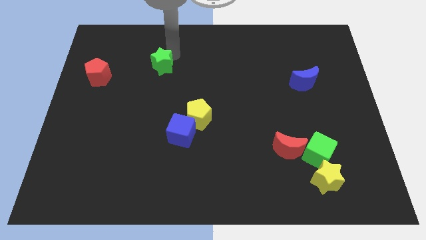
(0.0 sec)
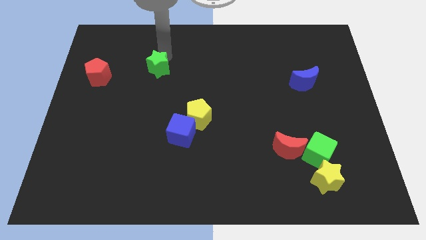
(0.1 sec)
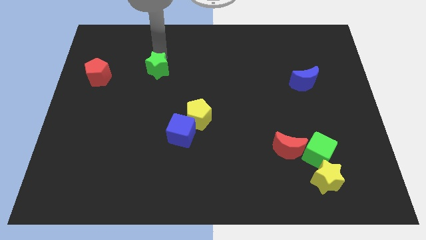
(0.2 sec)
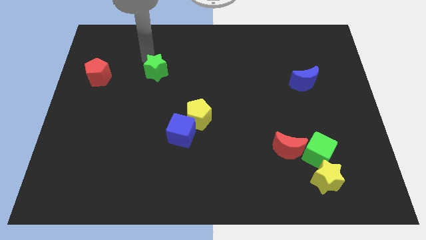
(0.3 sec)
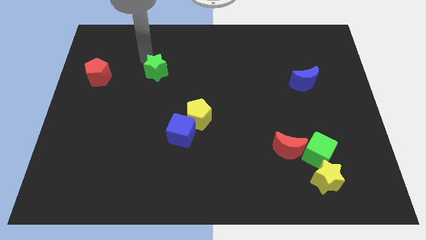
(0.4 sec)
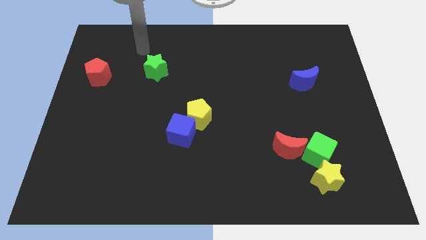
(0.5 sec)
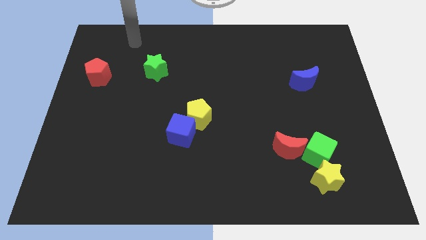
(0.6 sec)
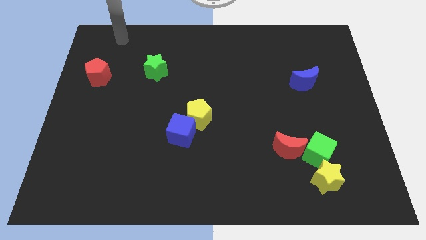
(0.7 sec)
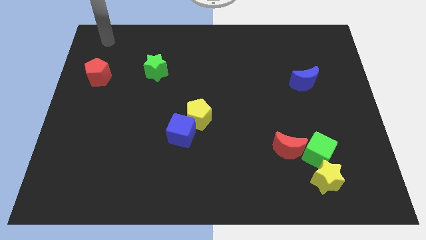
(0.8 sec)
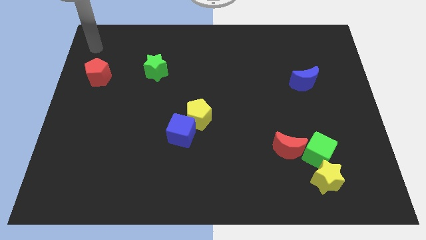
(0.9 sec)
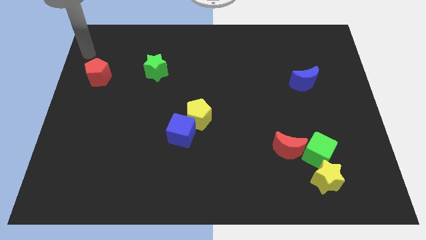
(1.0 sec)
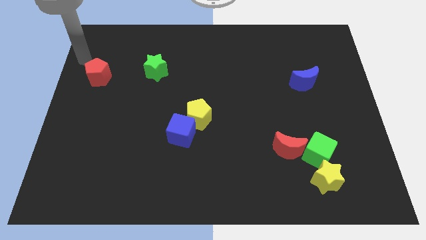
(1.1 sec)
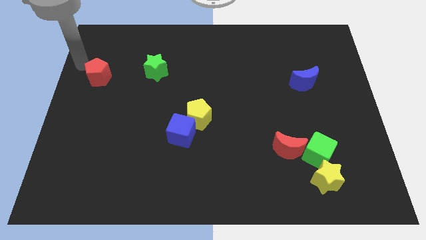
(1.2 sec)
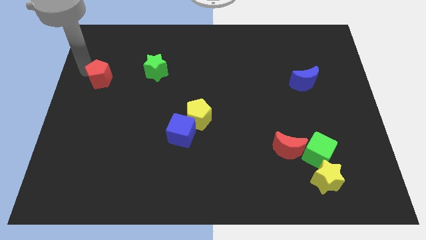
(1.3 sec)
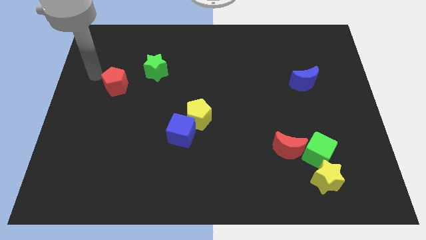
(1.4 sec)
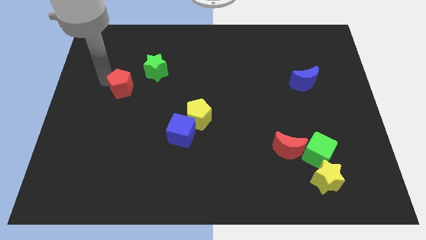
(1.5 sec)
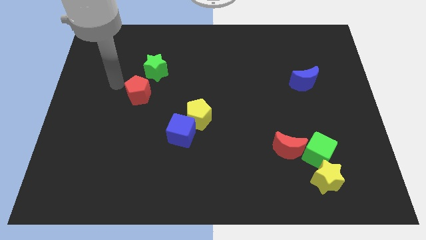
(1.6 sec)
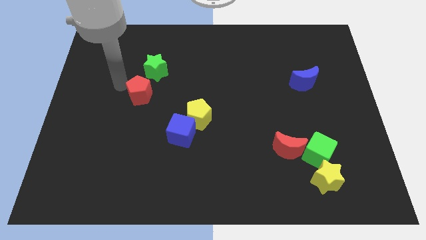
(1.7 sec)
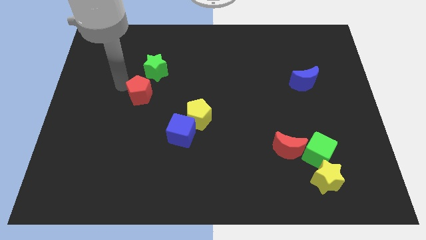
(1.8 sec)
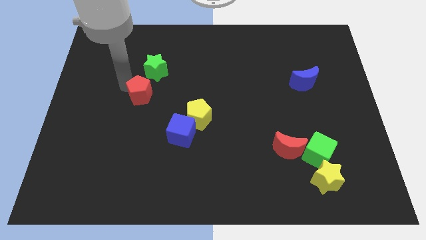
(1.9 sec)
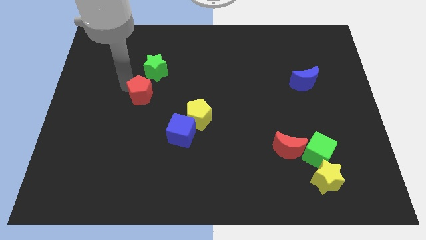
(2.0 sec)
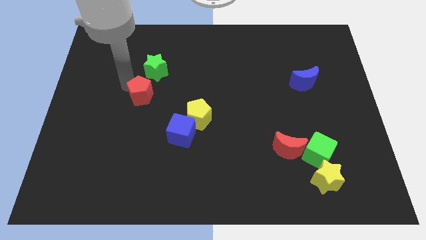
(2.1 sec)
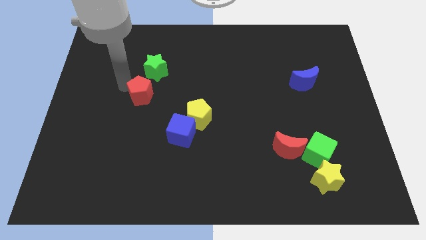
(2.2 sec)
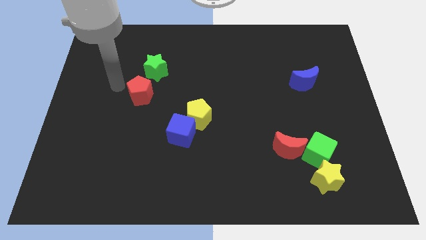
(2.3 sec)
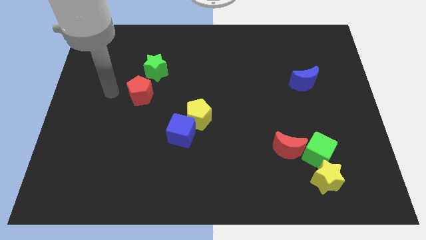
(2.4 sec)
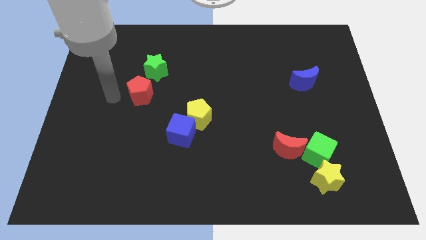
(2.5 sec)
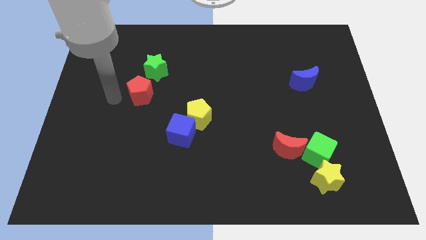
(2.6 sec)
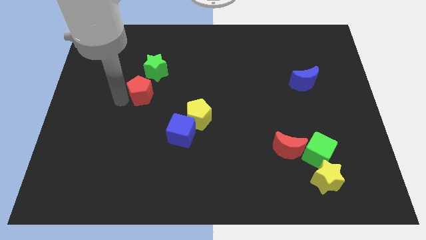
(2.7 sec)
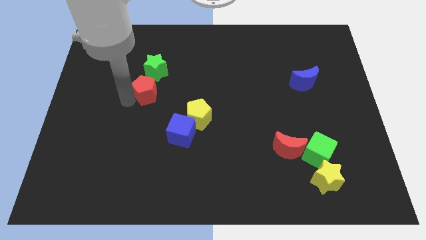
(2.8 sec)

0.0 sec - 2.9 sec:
move red pentagon near to green star

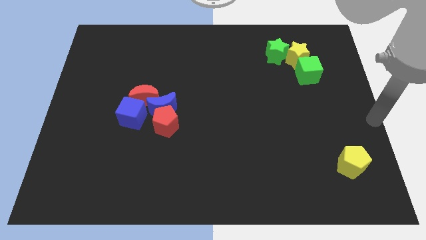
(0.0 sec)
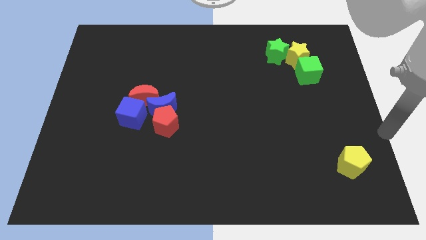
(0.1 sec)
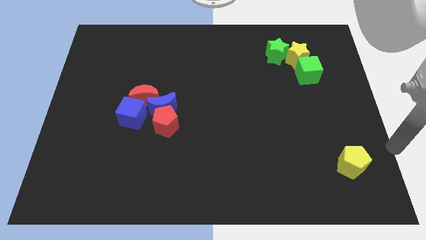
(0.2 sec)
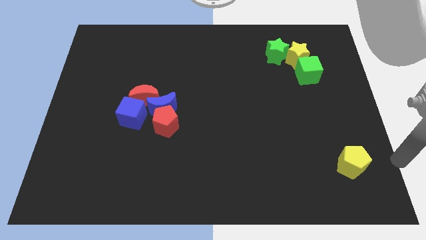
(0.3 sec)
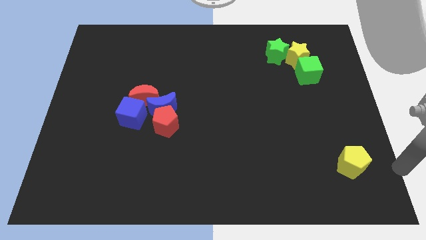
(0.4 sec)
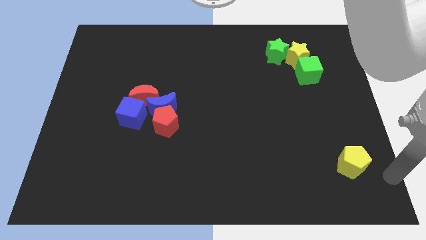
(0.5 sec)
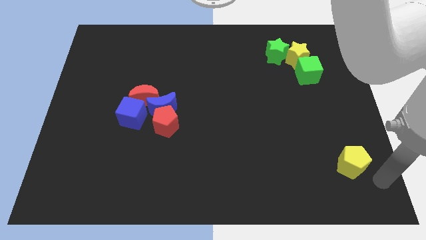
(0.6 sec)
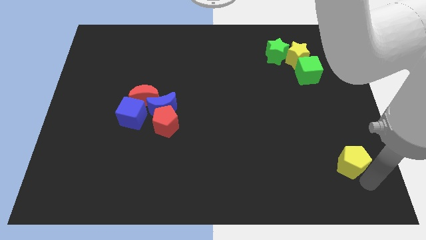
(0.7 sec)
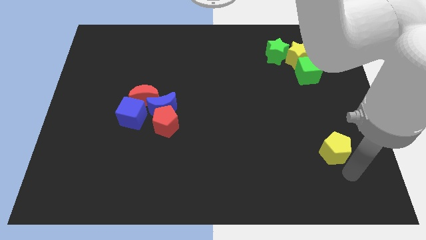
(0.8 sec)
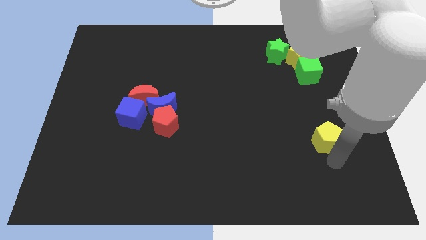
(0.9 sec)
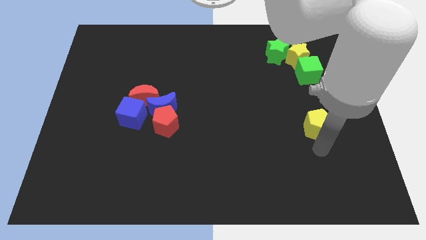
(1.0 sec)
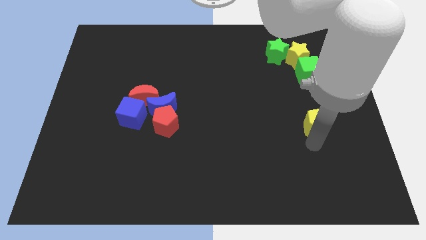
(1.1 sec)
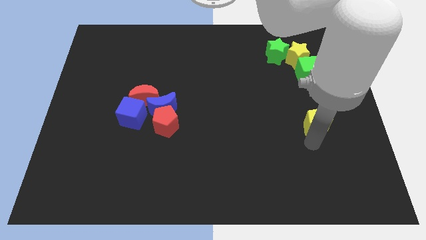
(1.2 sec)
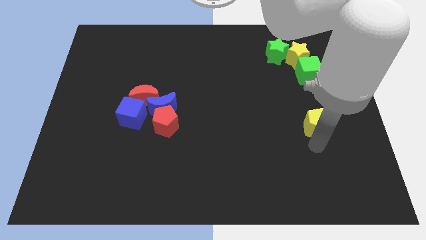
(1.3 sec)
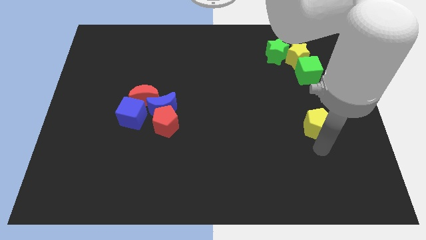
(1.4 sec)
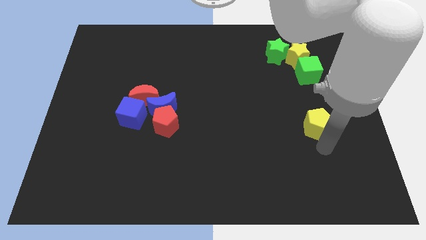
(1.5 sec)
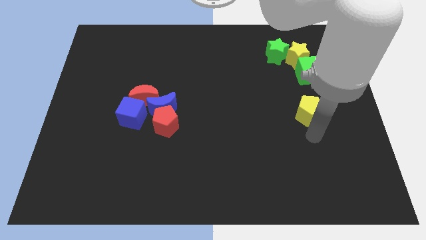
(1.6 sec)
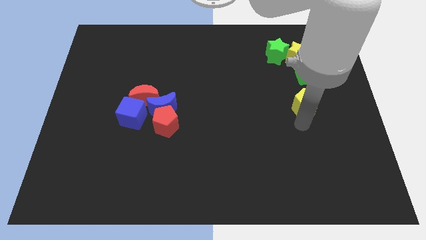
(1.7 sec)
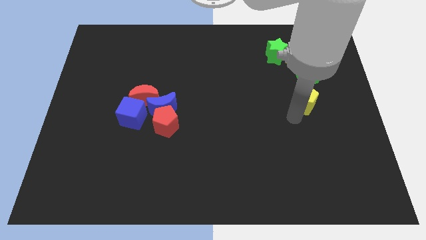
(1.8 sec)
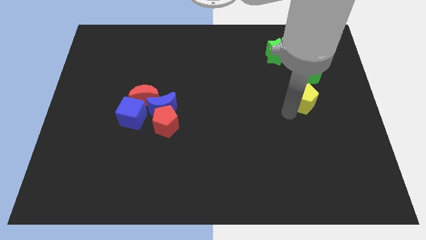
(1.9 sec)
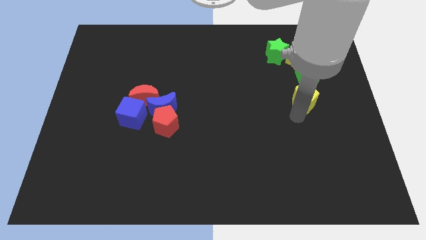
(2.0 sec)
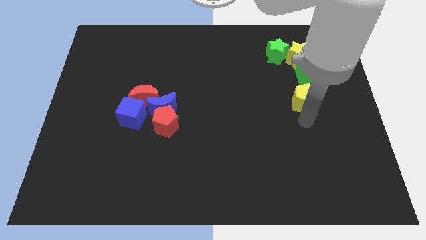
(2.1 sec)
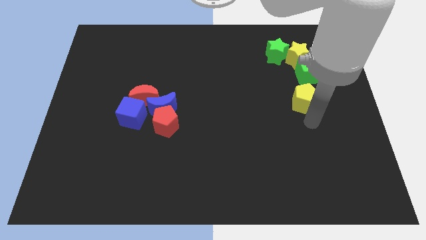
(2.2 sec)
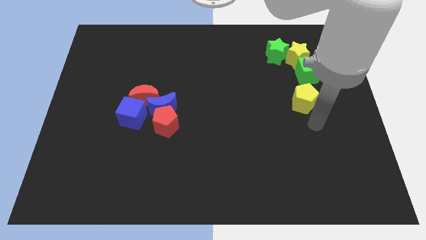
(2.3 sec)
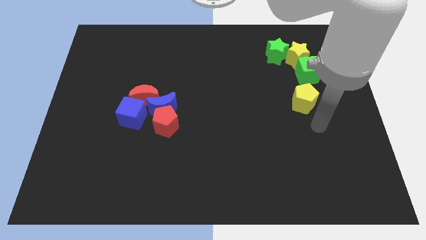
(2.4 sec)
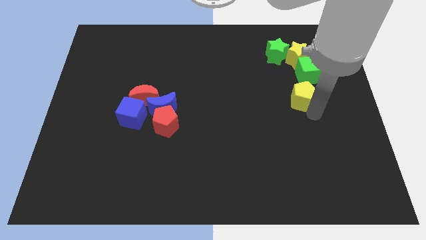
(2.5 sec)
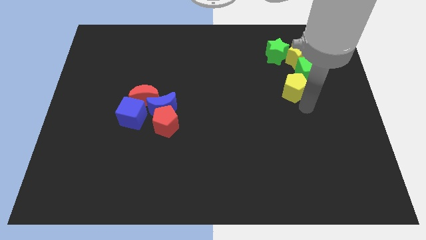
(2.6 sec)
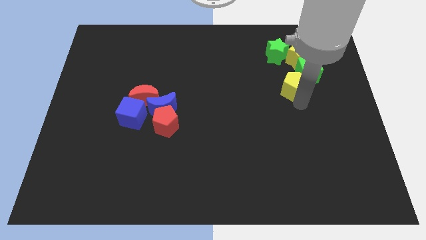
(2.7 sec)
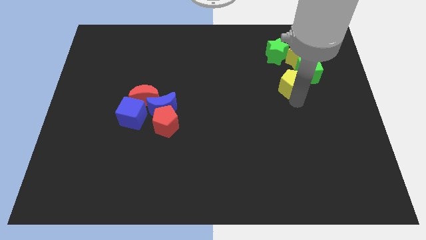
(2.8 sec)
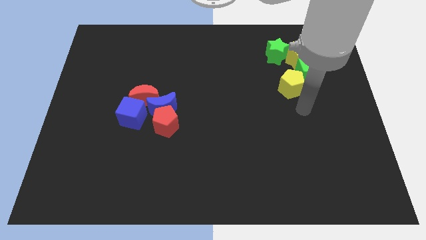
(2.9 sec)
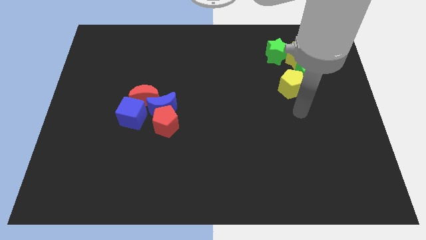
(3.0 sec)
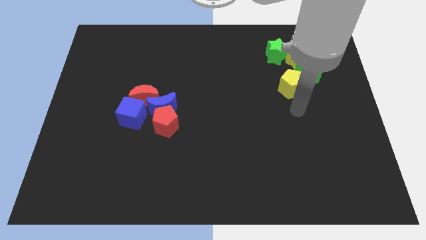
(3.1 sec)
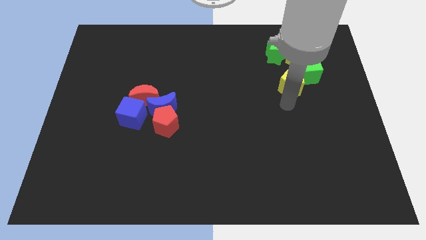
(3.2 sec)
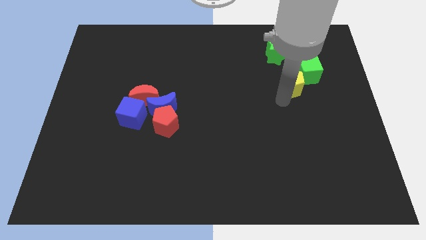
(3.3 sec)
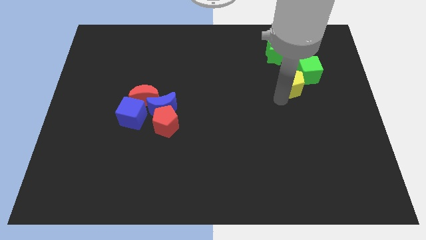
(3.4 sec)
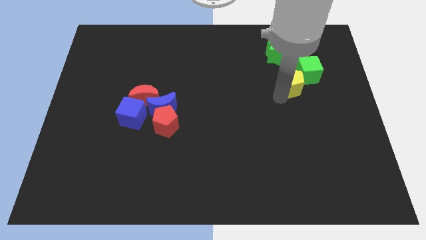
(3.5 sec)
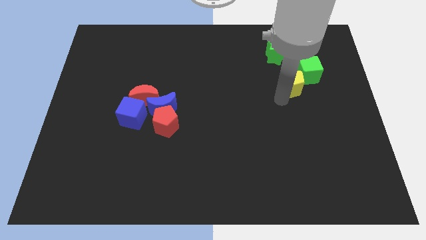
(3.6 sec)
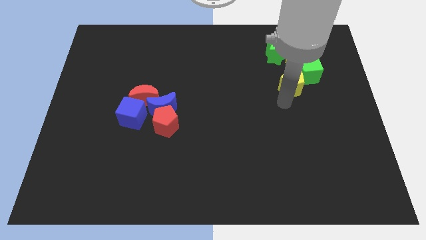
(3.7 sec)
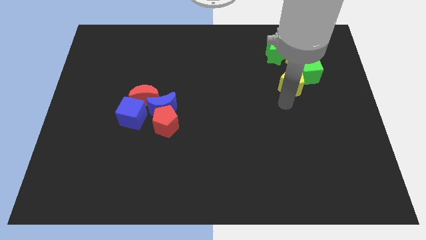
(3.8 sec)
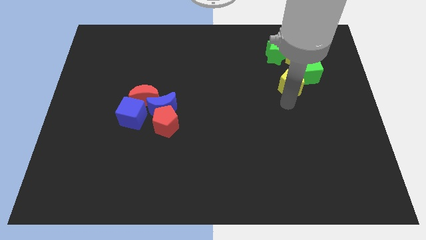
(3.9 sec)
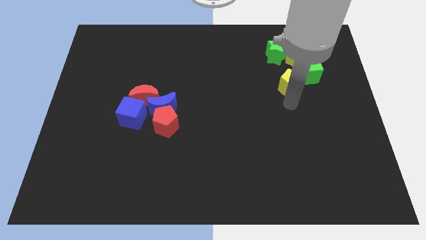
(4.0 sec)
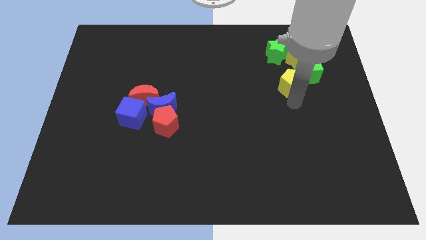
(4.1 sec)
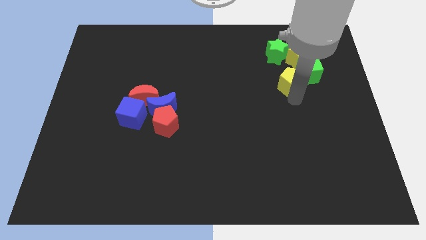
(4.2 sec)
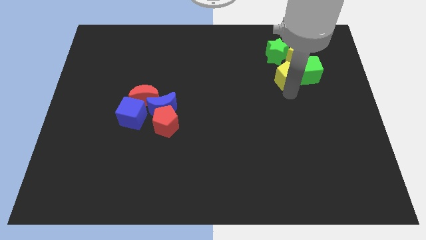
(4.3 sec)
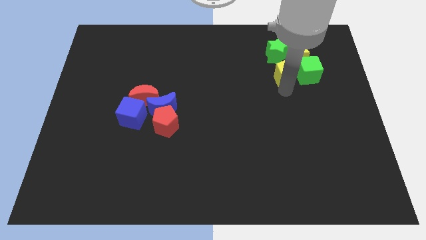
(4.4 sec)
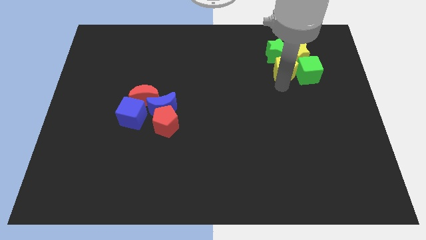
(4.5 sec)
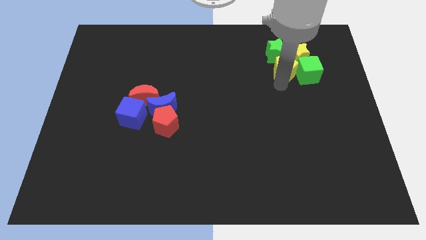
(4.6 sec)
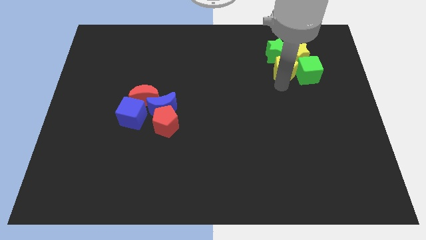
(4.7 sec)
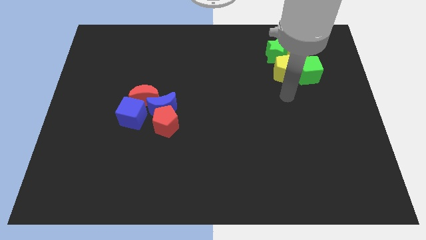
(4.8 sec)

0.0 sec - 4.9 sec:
push the yellow pentagon in between the two green blocks

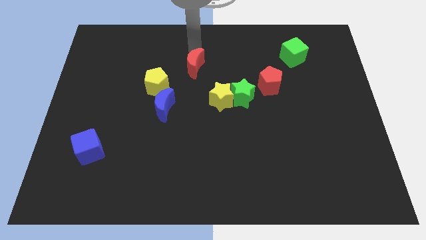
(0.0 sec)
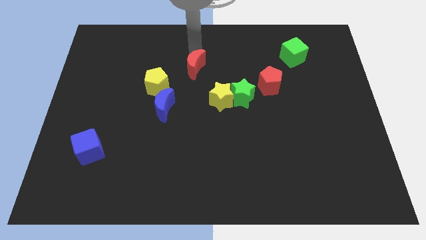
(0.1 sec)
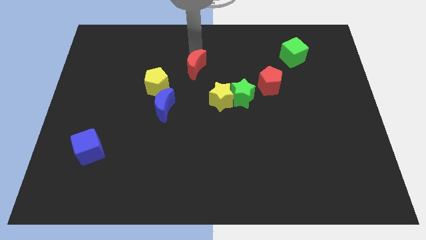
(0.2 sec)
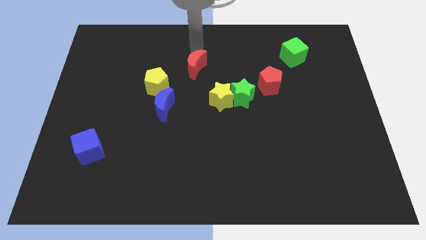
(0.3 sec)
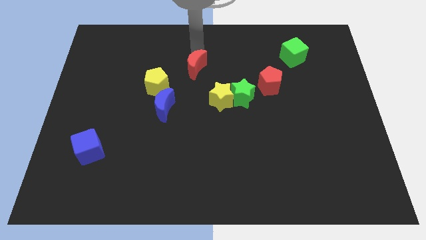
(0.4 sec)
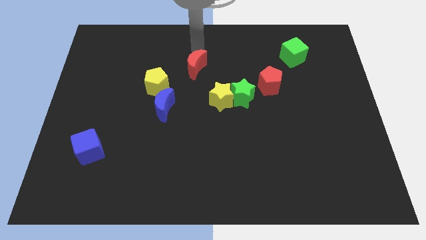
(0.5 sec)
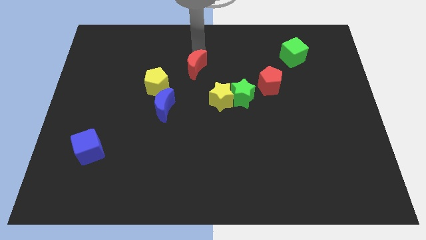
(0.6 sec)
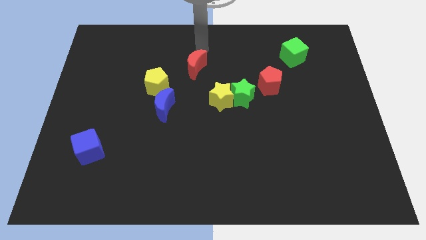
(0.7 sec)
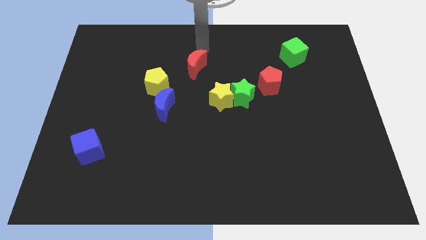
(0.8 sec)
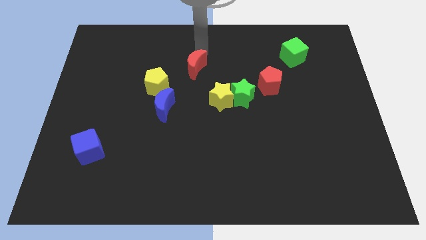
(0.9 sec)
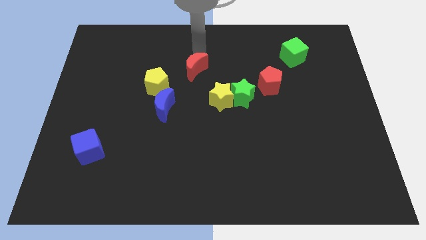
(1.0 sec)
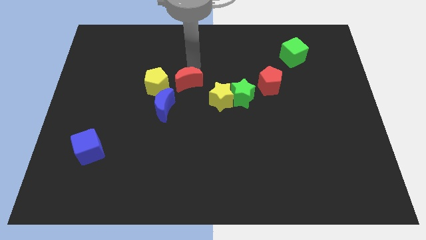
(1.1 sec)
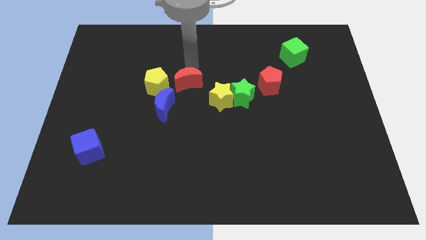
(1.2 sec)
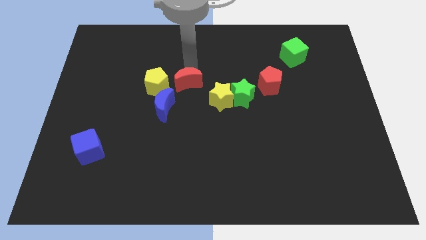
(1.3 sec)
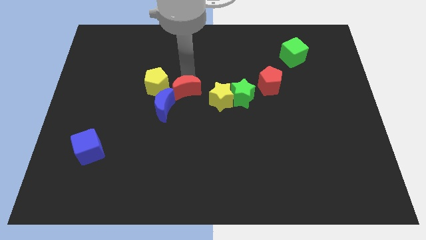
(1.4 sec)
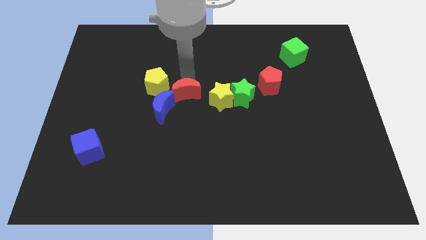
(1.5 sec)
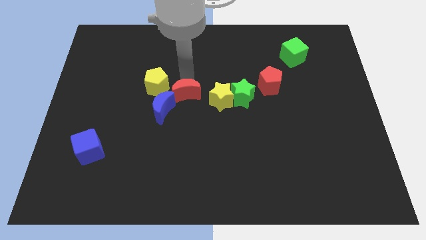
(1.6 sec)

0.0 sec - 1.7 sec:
push the red crescent into the blue crescent
